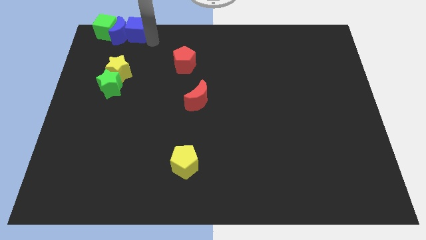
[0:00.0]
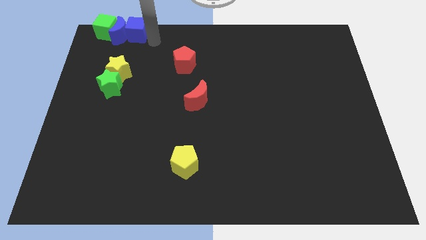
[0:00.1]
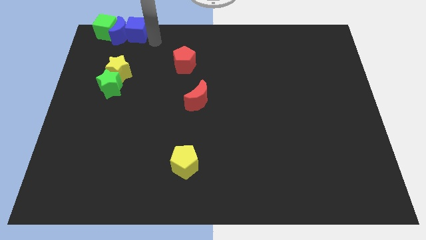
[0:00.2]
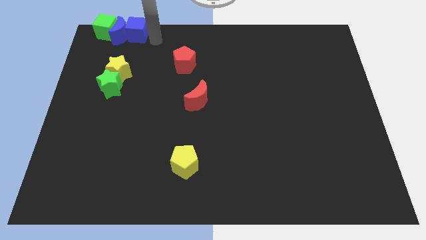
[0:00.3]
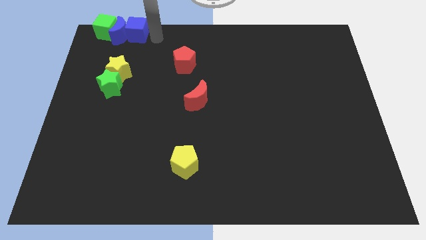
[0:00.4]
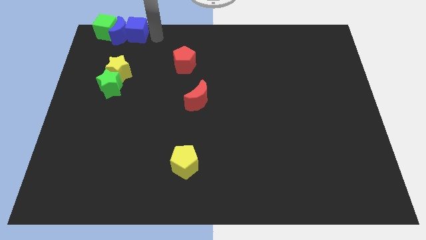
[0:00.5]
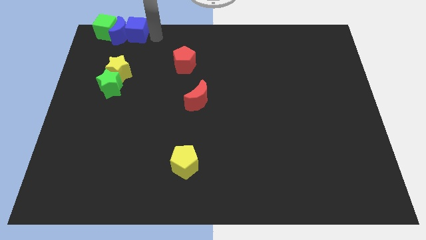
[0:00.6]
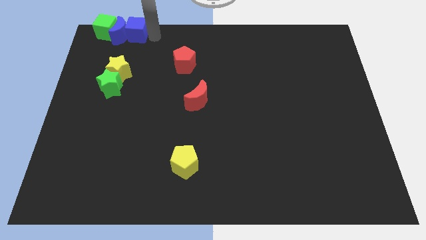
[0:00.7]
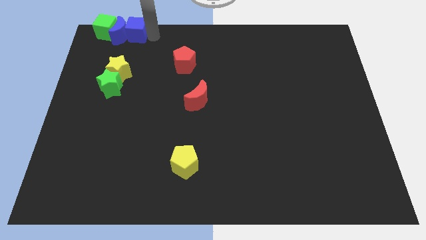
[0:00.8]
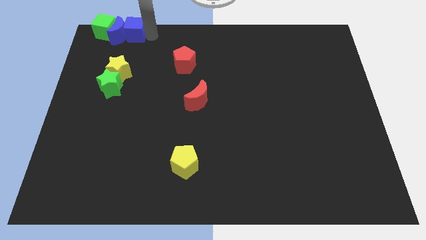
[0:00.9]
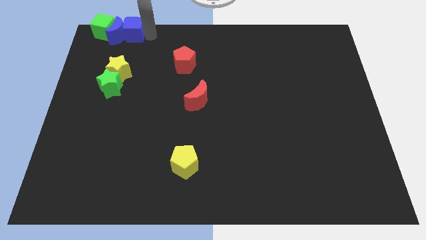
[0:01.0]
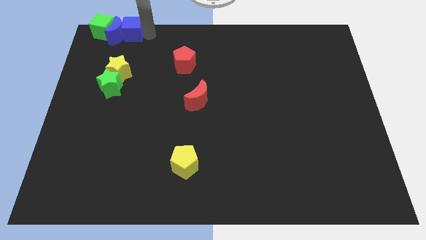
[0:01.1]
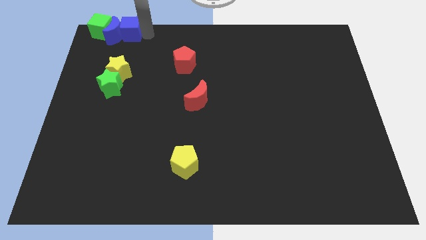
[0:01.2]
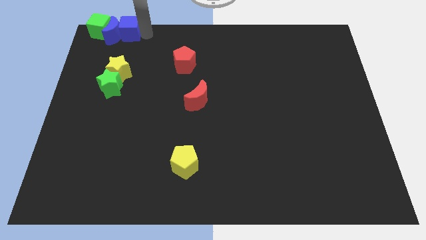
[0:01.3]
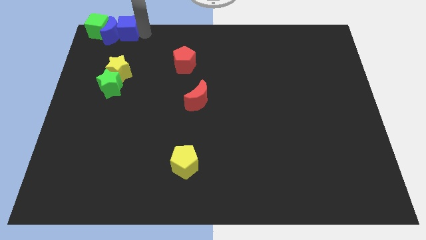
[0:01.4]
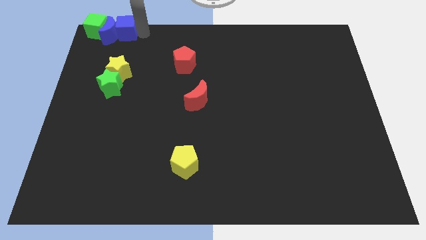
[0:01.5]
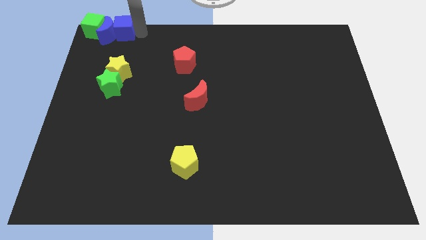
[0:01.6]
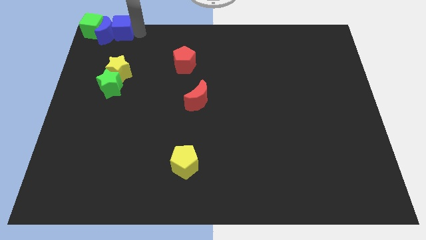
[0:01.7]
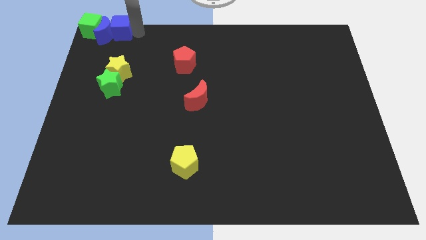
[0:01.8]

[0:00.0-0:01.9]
move blue cube to the top of the yellow star

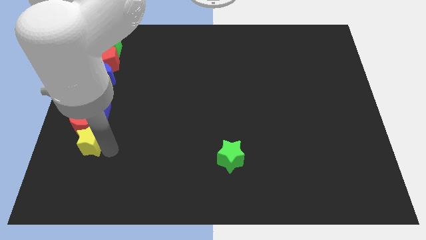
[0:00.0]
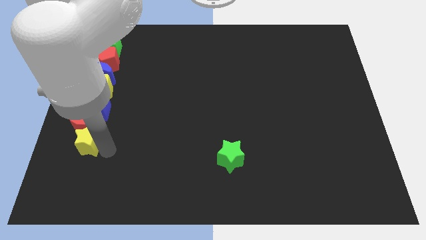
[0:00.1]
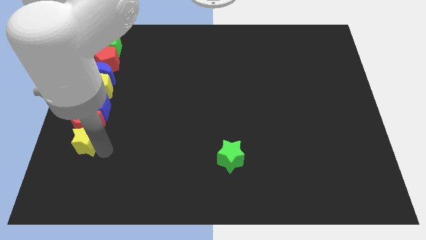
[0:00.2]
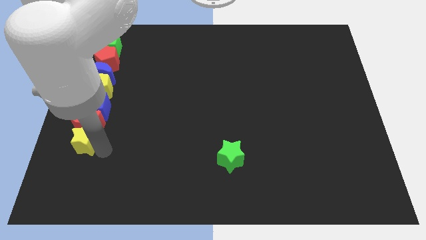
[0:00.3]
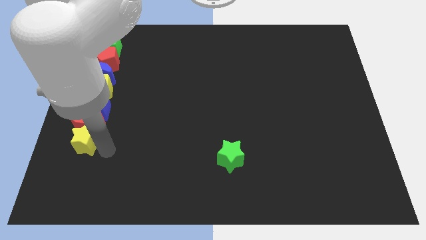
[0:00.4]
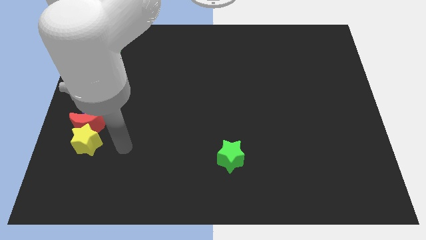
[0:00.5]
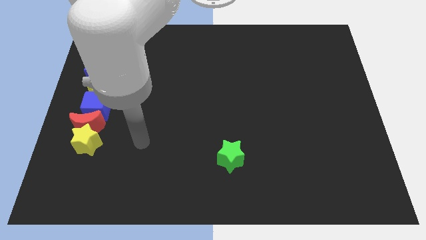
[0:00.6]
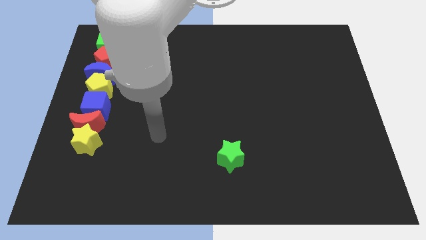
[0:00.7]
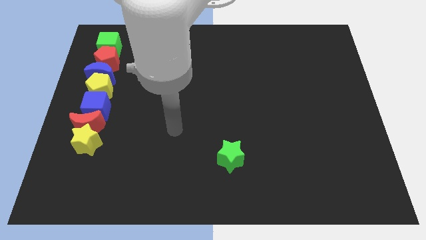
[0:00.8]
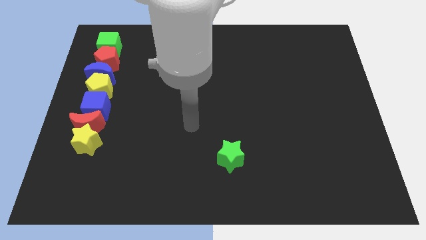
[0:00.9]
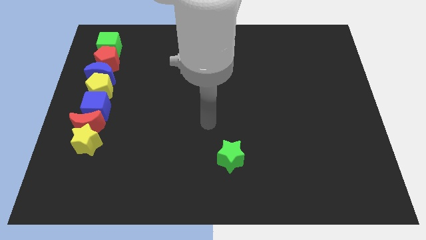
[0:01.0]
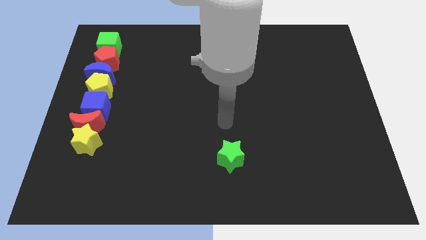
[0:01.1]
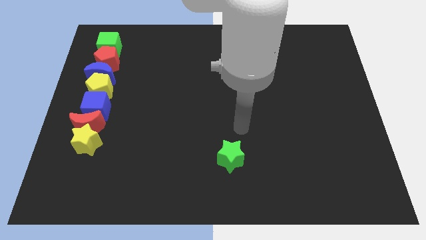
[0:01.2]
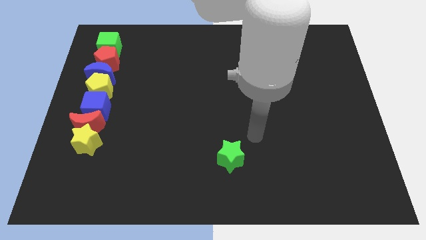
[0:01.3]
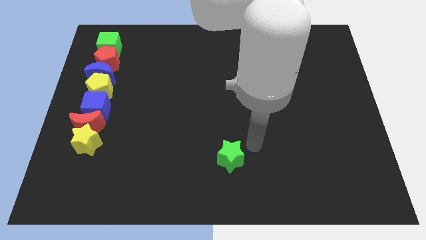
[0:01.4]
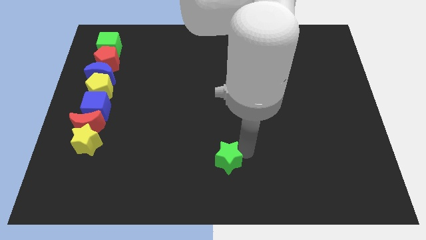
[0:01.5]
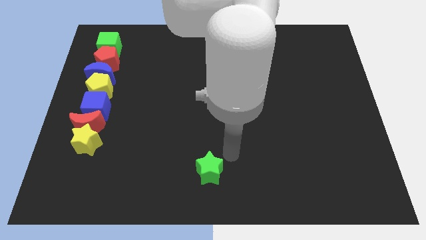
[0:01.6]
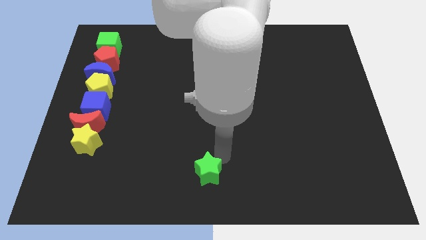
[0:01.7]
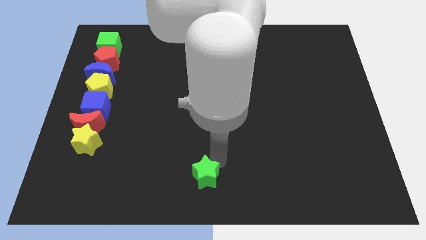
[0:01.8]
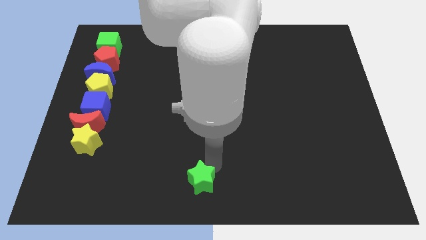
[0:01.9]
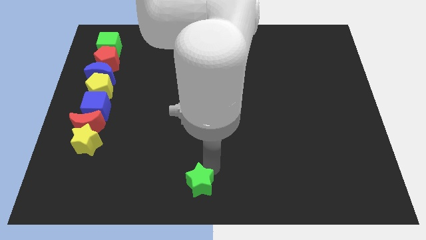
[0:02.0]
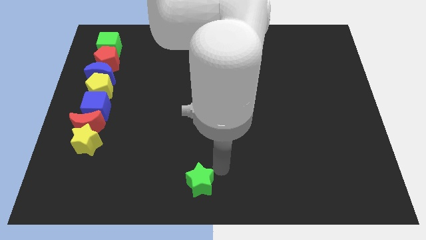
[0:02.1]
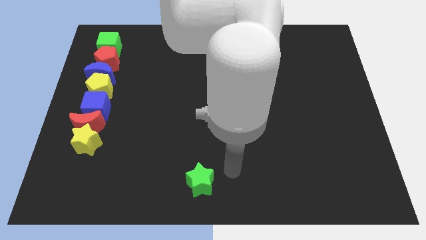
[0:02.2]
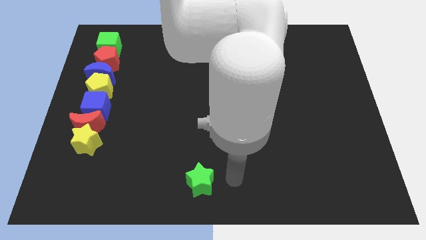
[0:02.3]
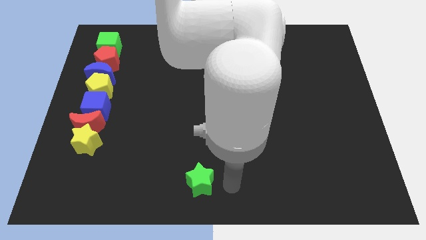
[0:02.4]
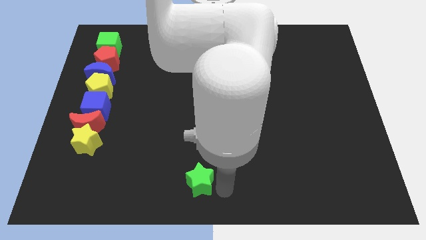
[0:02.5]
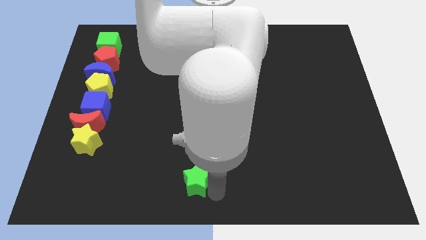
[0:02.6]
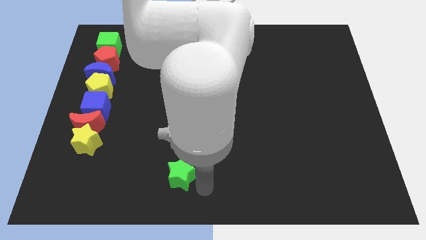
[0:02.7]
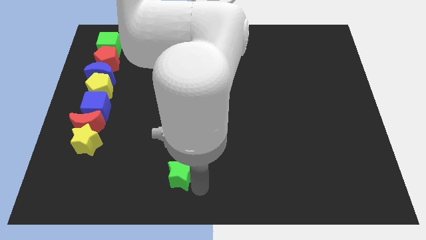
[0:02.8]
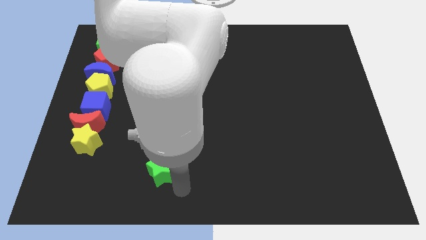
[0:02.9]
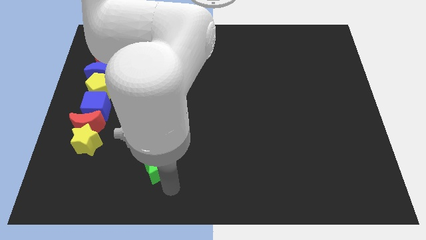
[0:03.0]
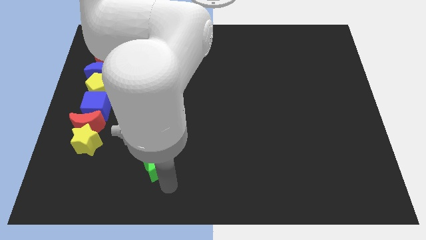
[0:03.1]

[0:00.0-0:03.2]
push the green star towards the yellow star

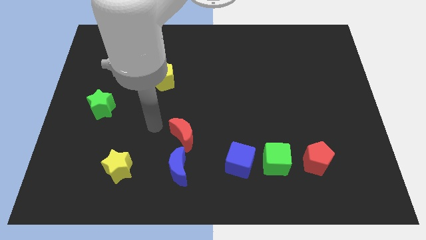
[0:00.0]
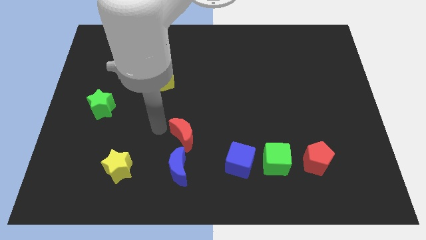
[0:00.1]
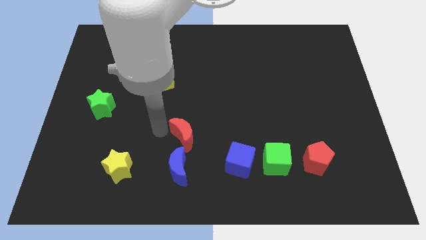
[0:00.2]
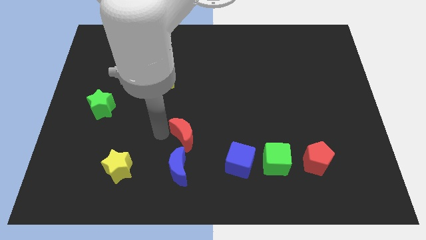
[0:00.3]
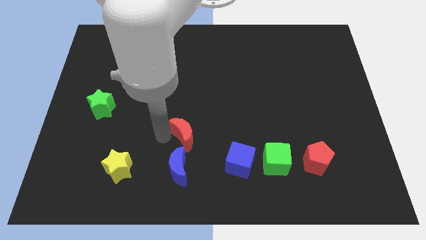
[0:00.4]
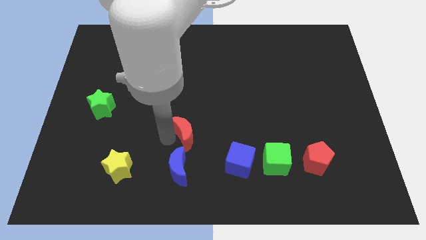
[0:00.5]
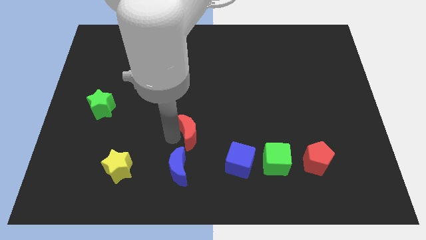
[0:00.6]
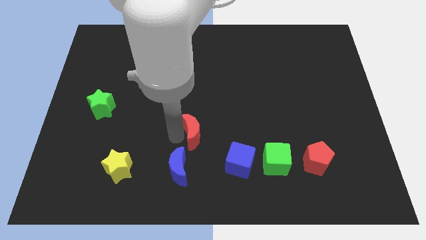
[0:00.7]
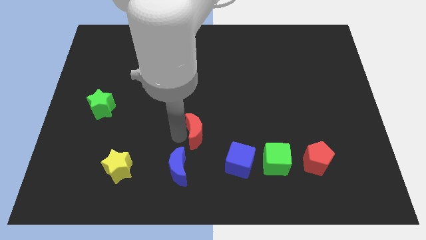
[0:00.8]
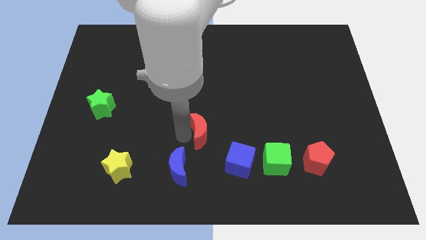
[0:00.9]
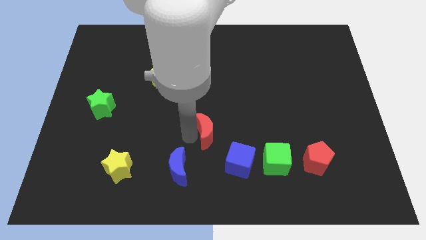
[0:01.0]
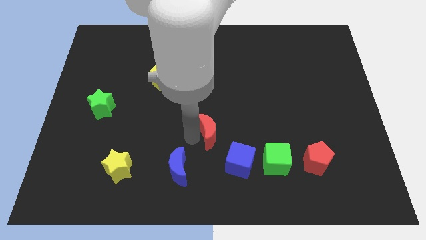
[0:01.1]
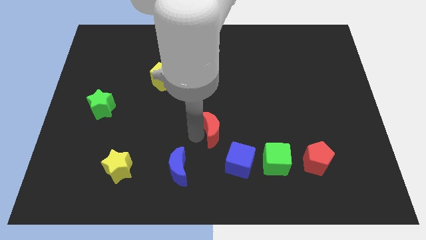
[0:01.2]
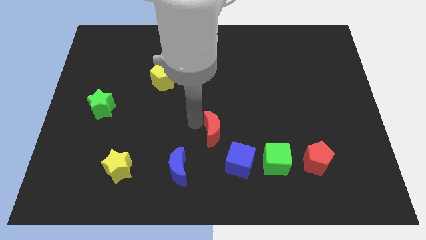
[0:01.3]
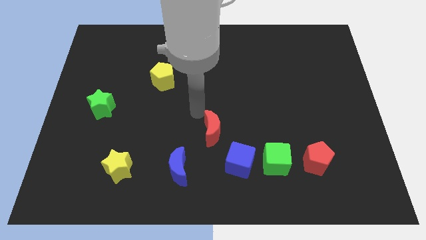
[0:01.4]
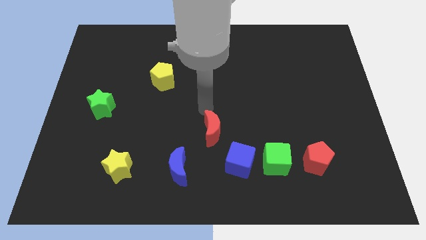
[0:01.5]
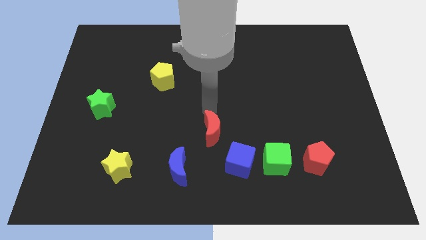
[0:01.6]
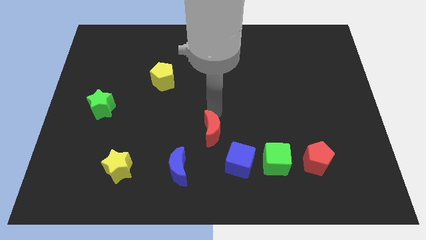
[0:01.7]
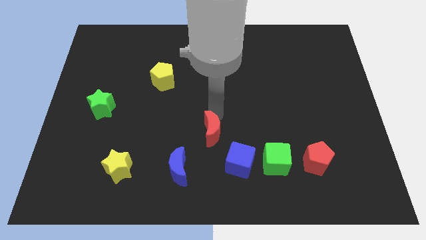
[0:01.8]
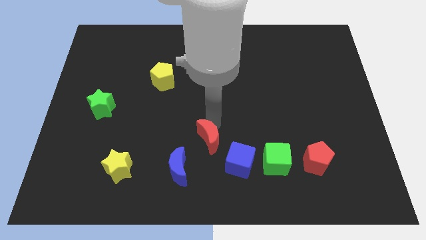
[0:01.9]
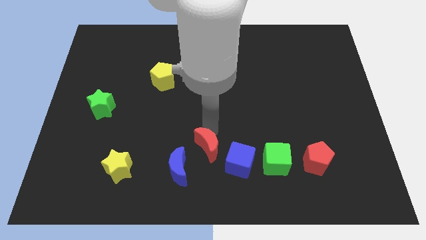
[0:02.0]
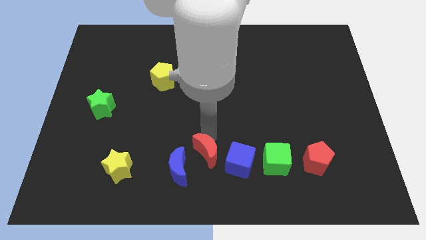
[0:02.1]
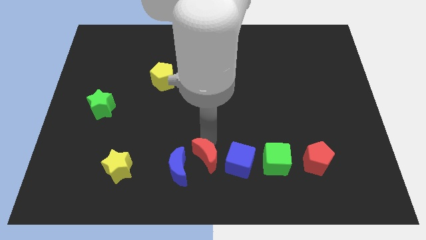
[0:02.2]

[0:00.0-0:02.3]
push the red crescent to the left of the blue cube

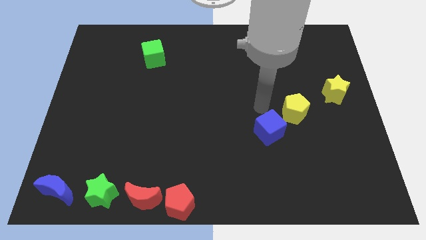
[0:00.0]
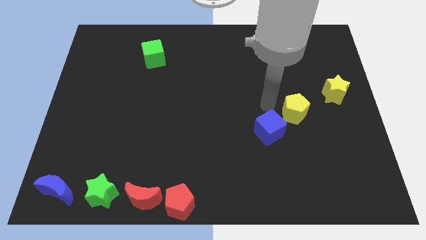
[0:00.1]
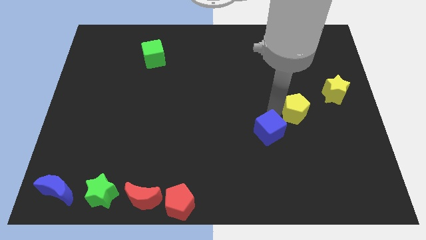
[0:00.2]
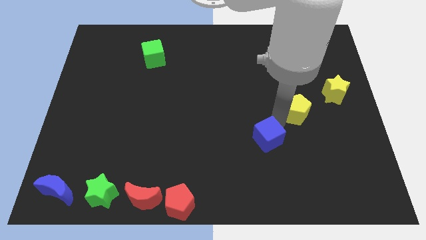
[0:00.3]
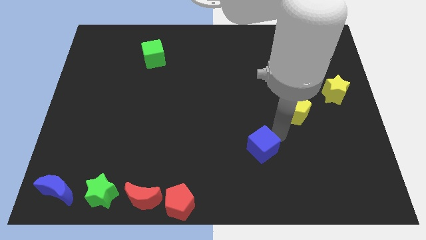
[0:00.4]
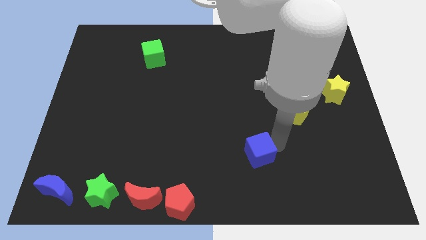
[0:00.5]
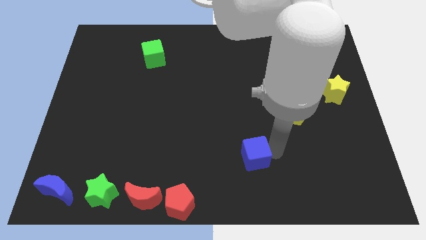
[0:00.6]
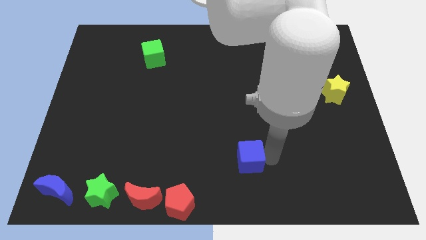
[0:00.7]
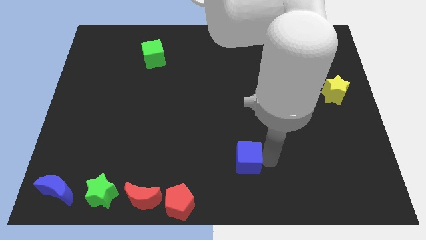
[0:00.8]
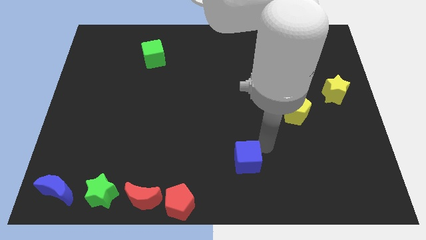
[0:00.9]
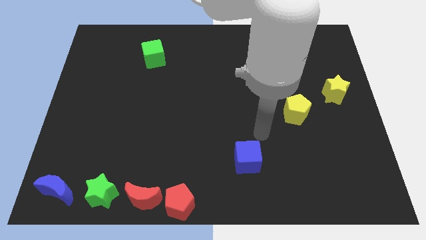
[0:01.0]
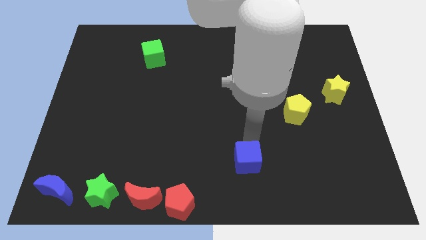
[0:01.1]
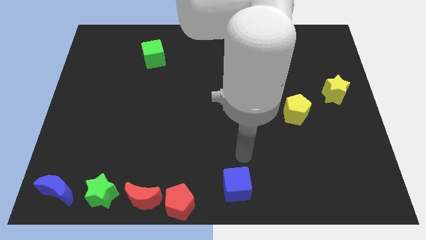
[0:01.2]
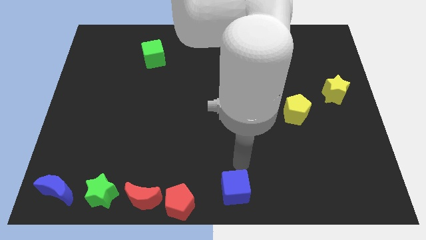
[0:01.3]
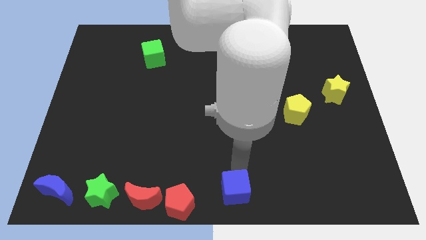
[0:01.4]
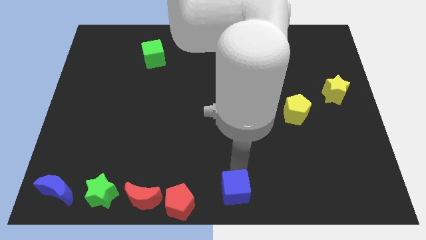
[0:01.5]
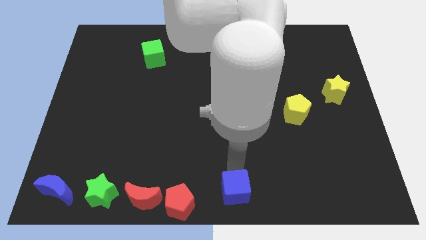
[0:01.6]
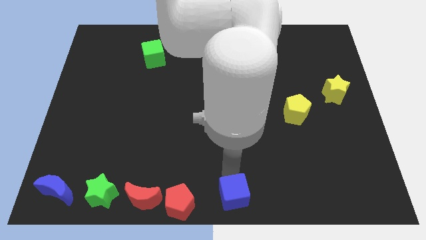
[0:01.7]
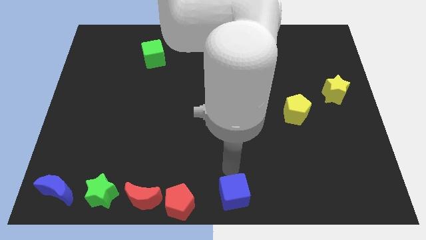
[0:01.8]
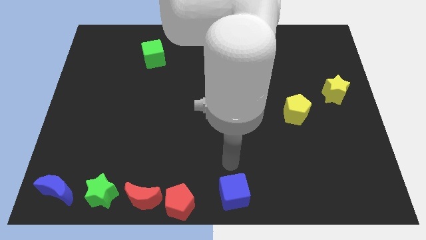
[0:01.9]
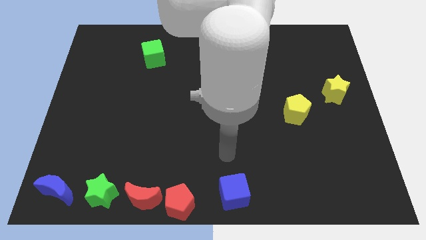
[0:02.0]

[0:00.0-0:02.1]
move the blue cube to the right side of the red pentagon
